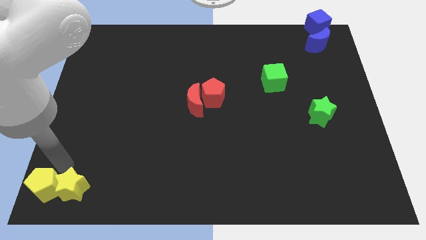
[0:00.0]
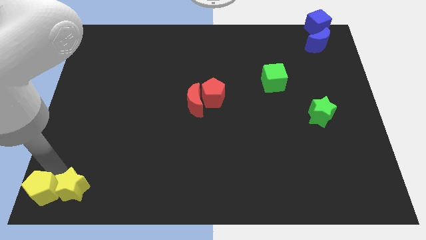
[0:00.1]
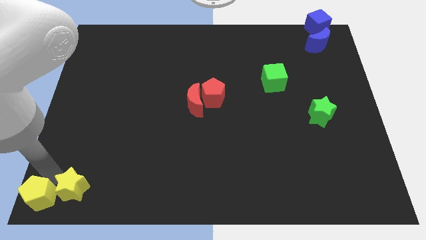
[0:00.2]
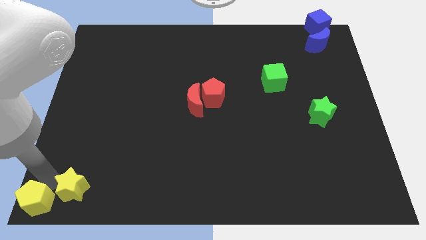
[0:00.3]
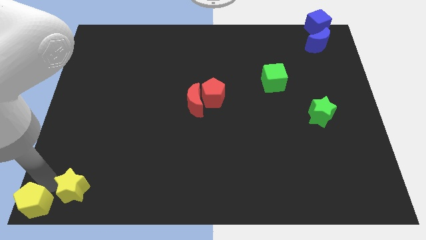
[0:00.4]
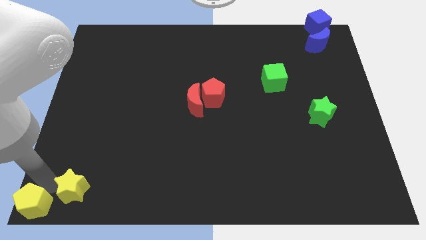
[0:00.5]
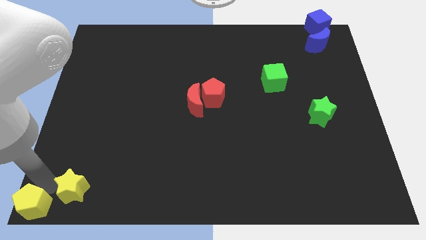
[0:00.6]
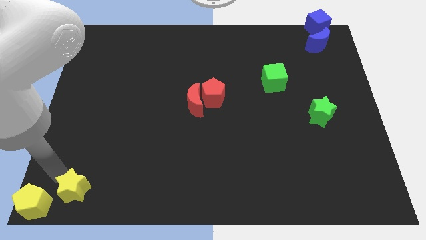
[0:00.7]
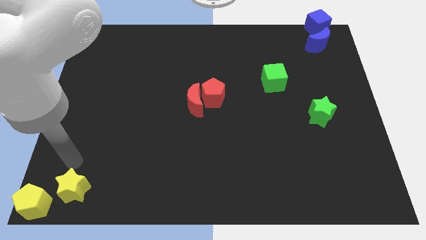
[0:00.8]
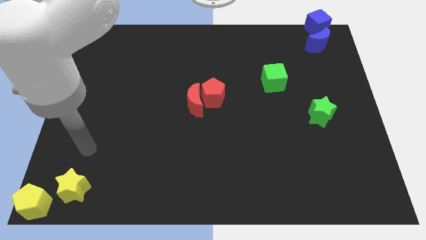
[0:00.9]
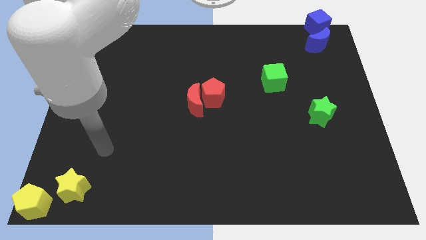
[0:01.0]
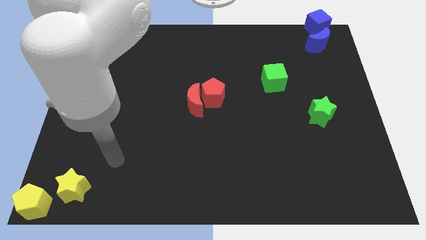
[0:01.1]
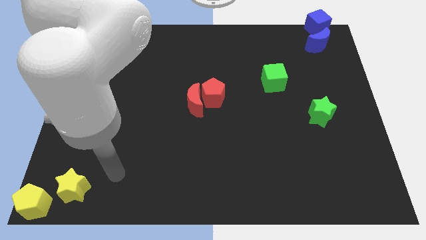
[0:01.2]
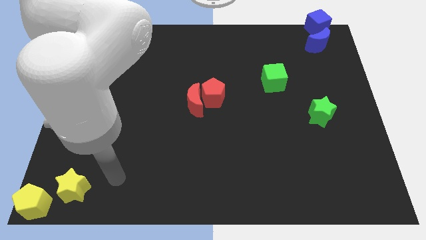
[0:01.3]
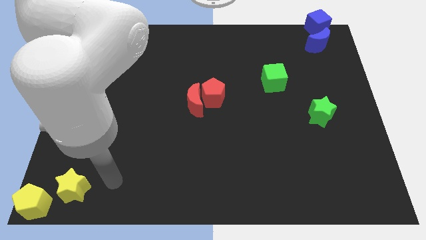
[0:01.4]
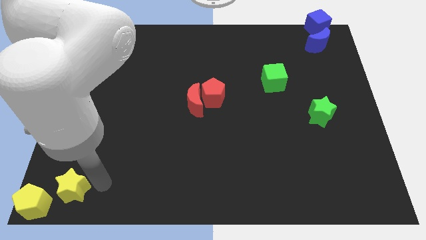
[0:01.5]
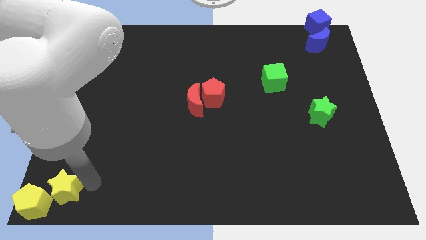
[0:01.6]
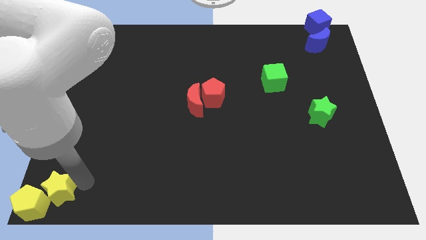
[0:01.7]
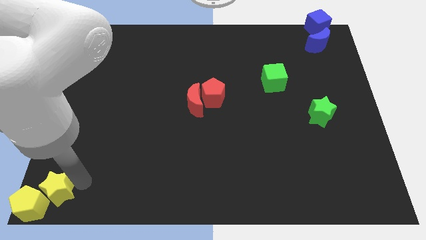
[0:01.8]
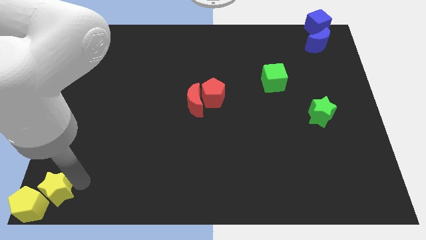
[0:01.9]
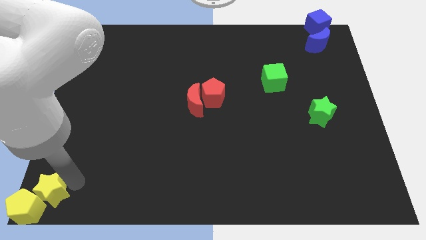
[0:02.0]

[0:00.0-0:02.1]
push the yellow blocks to the bottom left corner of the board

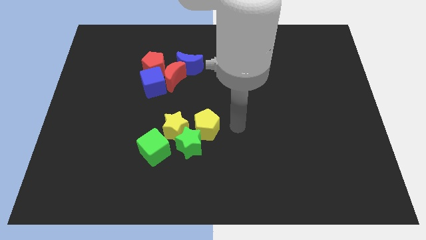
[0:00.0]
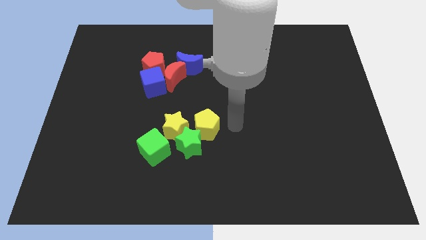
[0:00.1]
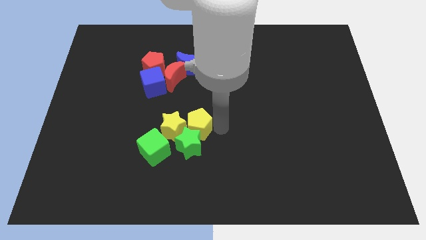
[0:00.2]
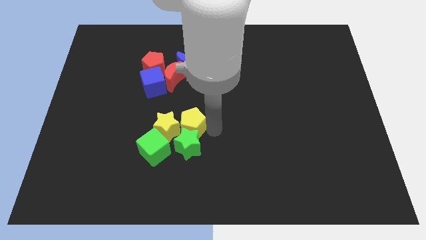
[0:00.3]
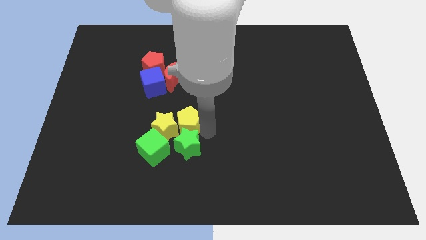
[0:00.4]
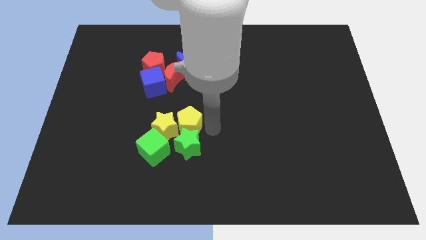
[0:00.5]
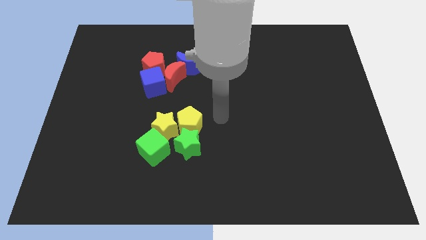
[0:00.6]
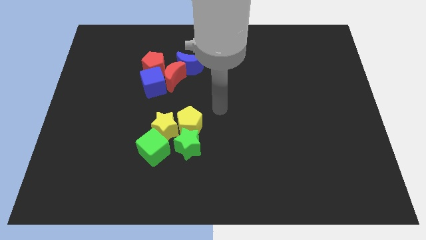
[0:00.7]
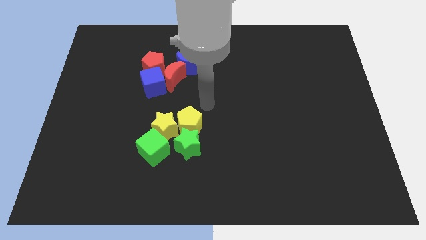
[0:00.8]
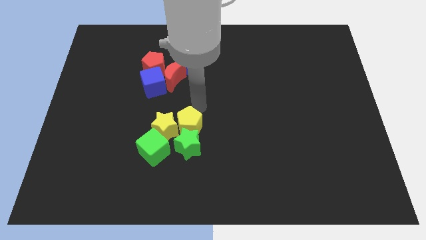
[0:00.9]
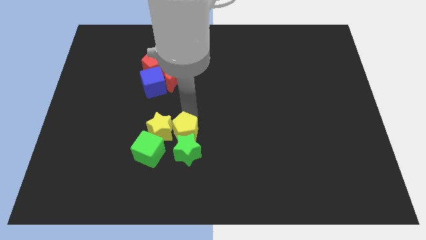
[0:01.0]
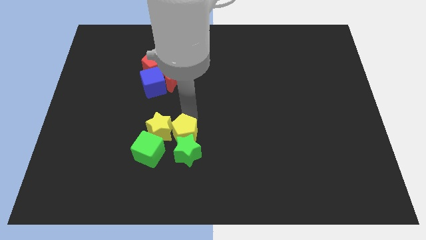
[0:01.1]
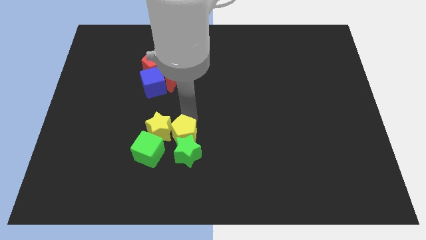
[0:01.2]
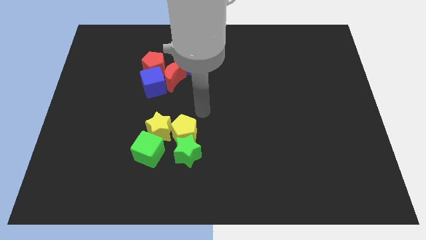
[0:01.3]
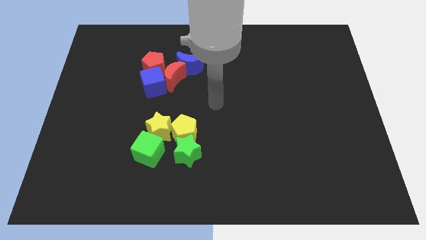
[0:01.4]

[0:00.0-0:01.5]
push the green star and yellow star with the yellow pentagon

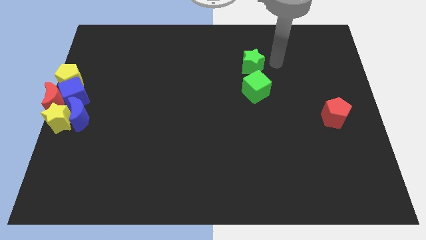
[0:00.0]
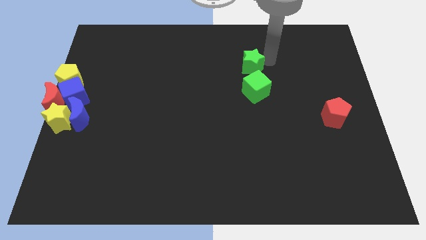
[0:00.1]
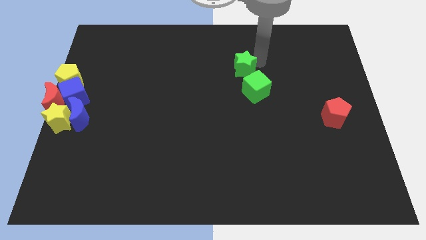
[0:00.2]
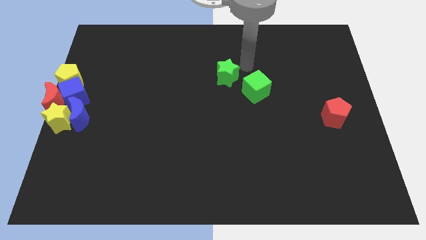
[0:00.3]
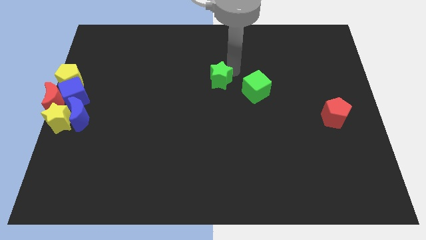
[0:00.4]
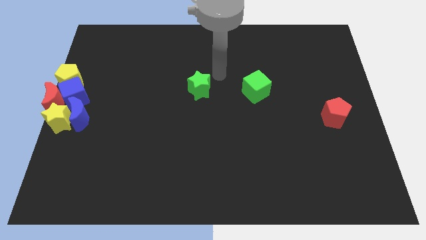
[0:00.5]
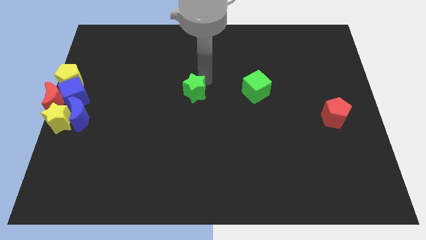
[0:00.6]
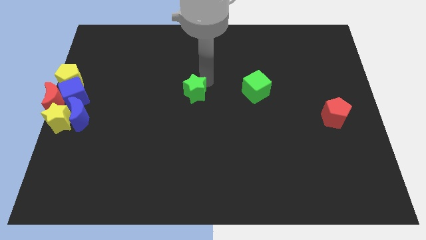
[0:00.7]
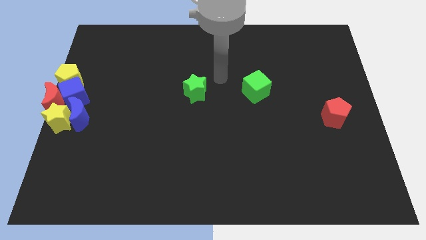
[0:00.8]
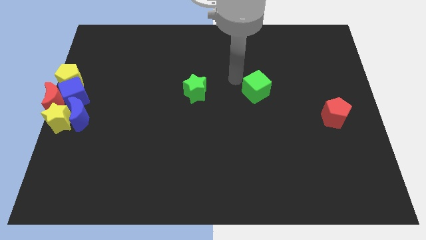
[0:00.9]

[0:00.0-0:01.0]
move the green star left of the green cube

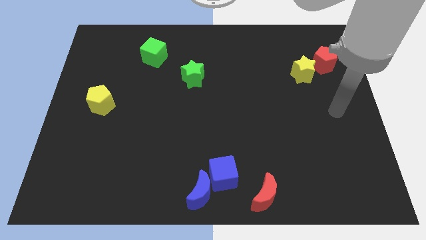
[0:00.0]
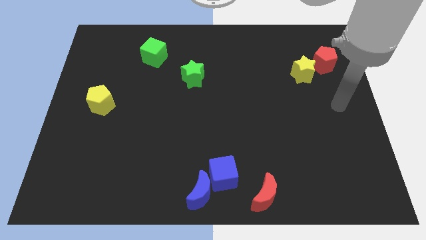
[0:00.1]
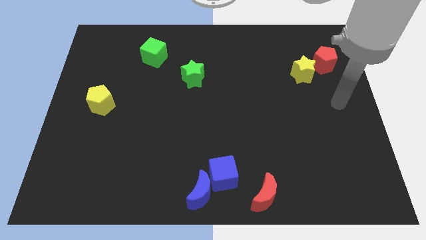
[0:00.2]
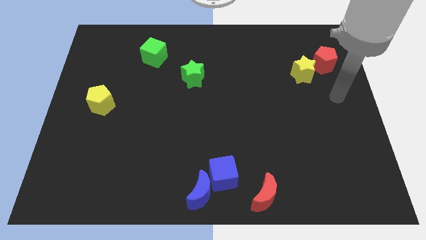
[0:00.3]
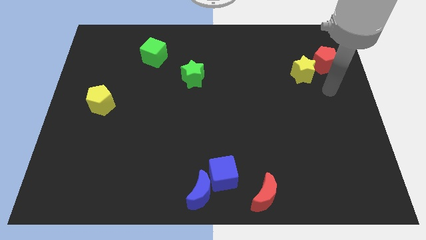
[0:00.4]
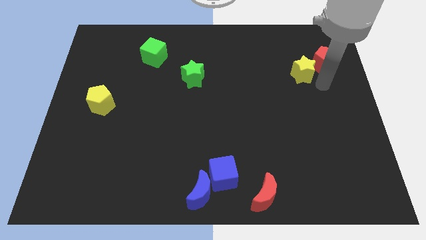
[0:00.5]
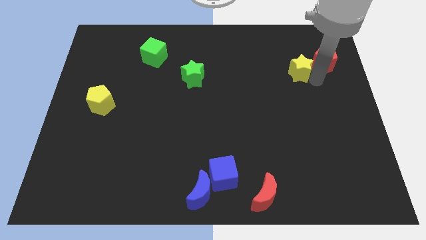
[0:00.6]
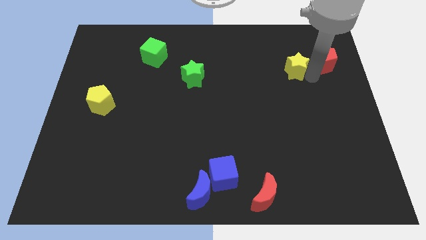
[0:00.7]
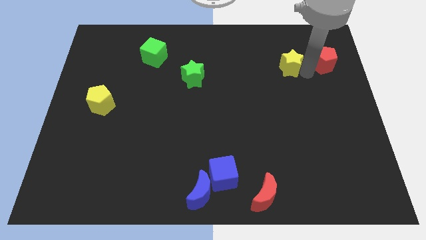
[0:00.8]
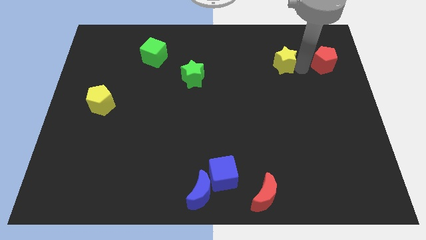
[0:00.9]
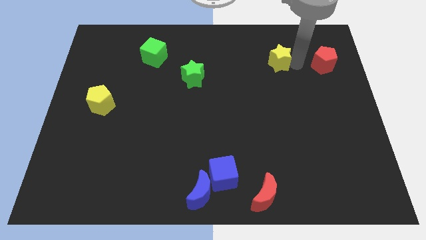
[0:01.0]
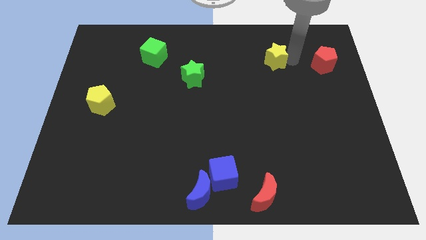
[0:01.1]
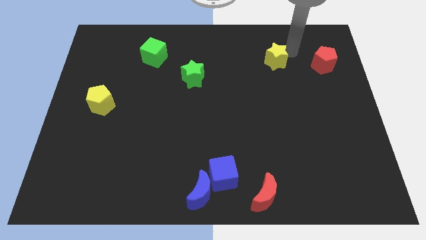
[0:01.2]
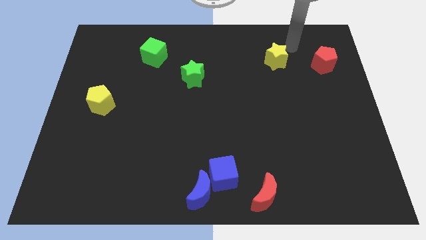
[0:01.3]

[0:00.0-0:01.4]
separate the yellow star from the red pentagon

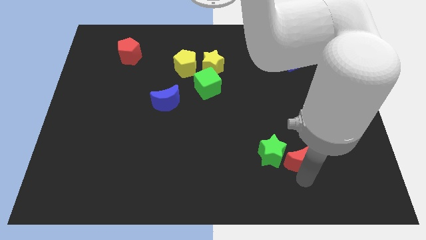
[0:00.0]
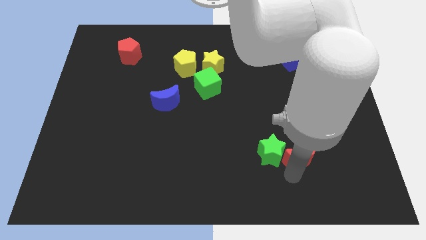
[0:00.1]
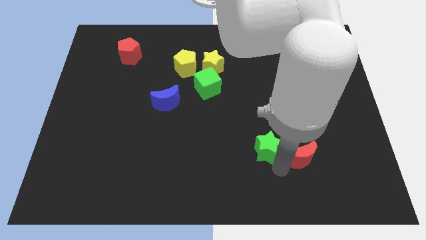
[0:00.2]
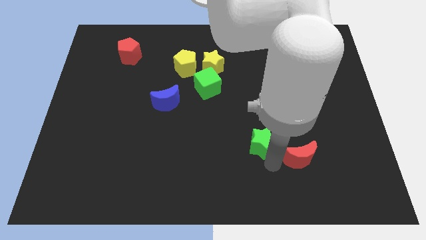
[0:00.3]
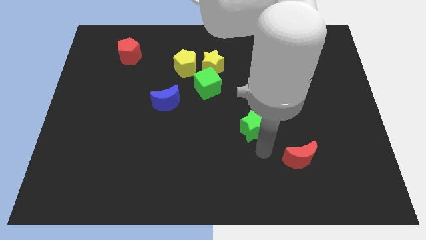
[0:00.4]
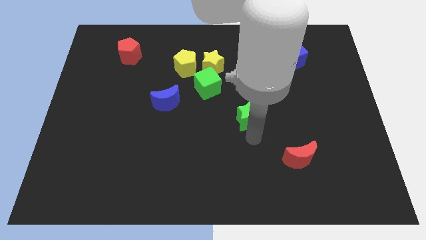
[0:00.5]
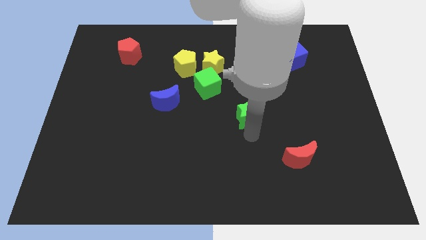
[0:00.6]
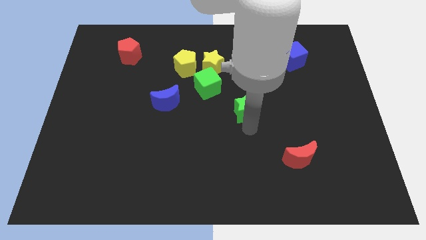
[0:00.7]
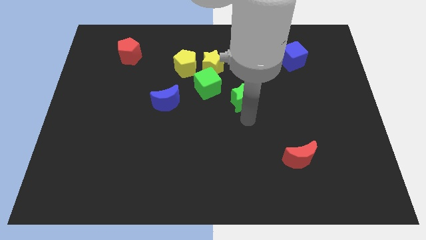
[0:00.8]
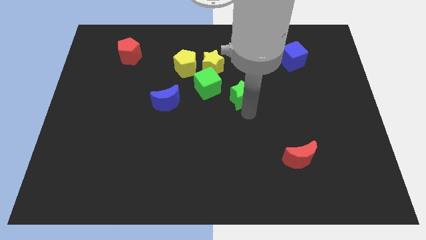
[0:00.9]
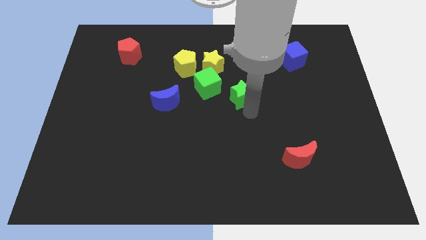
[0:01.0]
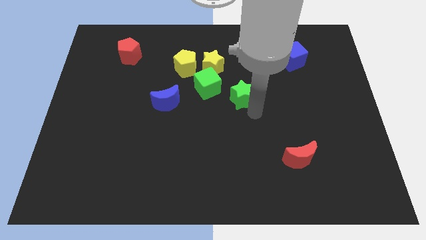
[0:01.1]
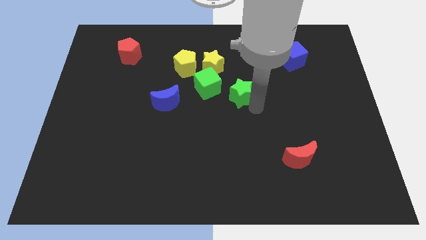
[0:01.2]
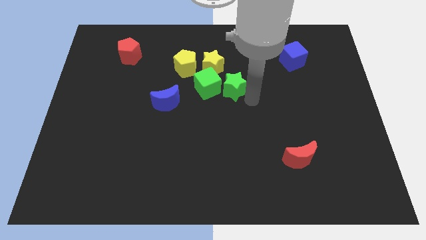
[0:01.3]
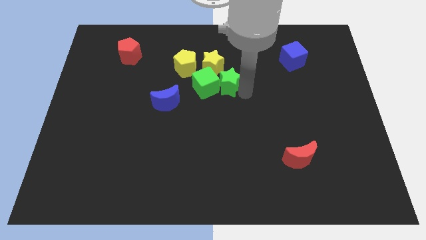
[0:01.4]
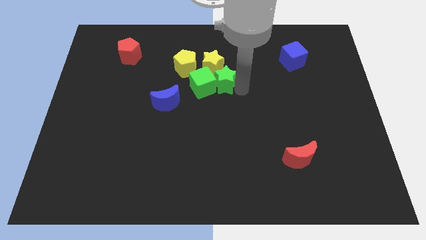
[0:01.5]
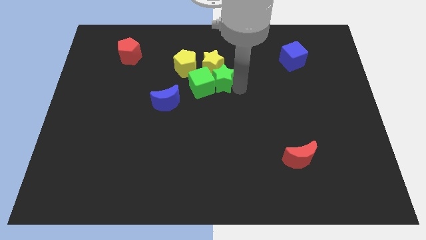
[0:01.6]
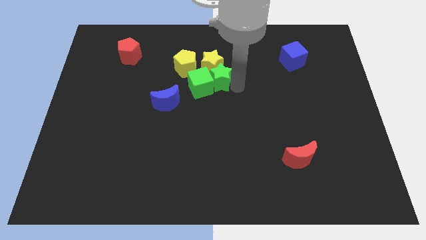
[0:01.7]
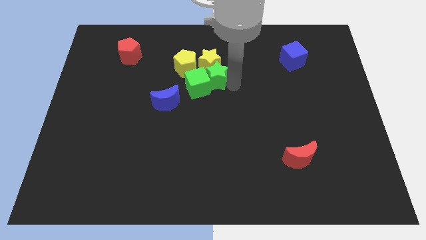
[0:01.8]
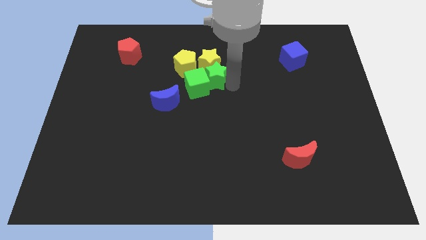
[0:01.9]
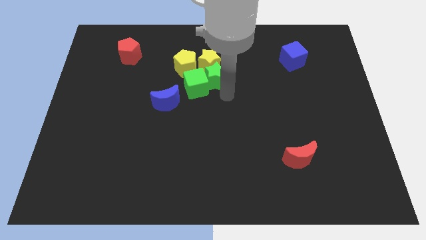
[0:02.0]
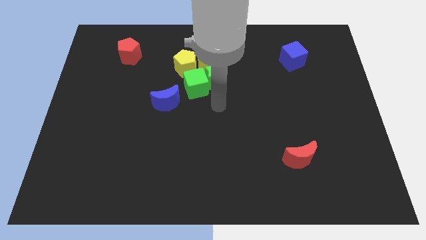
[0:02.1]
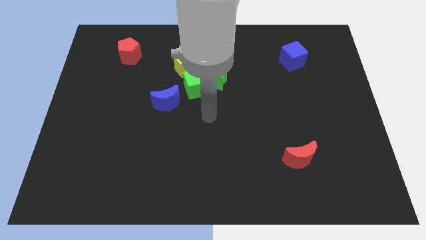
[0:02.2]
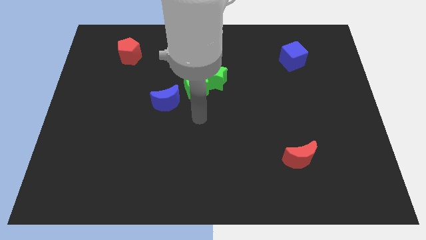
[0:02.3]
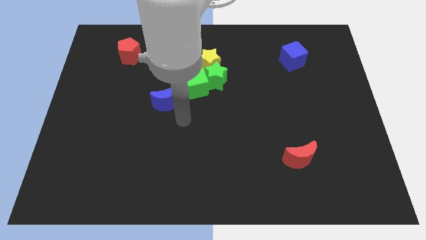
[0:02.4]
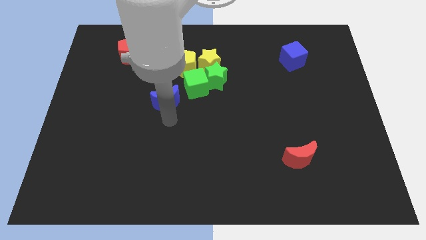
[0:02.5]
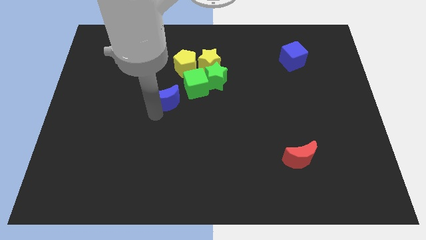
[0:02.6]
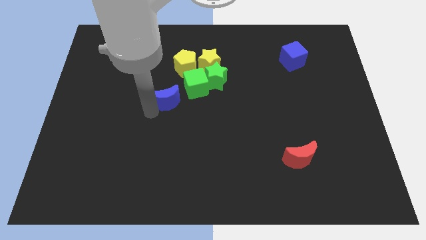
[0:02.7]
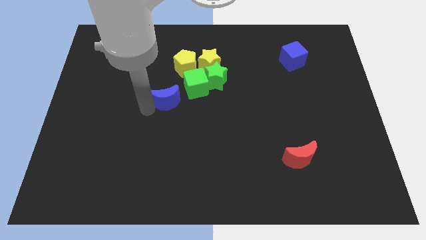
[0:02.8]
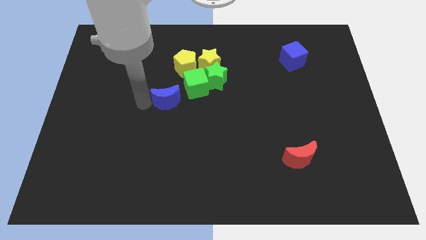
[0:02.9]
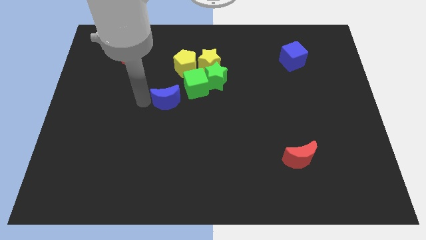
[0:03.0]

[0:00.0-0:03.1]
push the green star into the bottom of the yellow star
